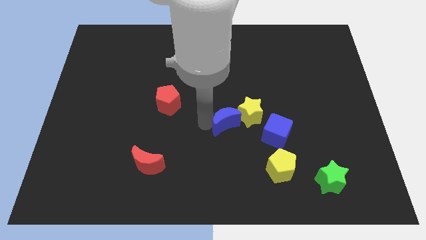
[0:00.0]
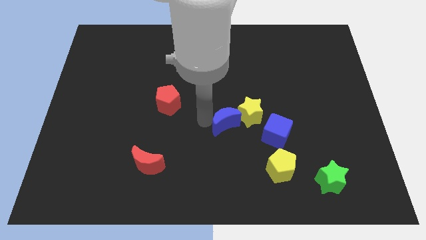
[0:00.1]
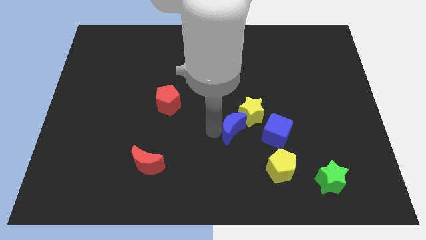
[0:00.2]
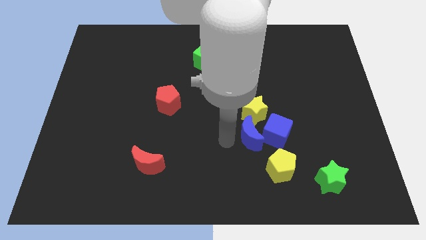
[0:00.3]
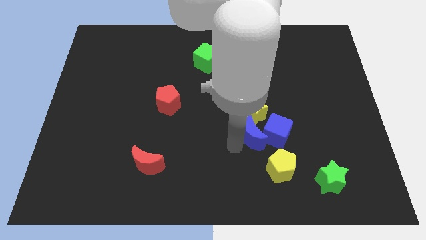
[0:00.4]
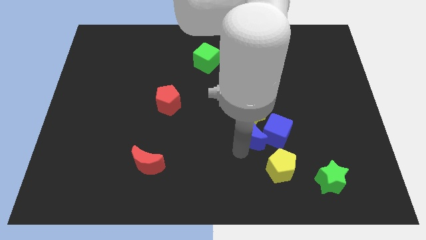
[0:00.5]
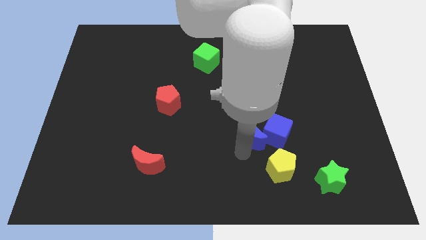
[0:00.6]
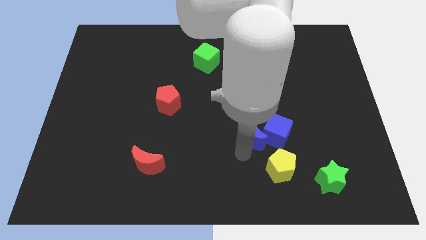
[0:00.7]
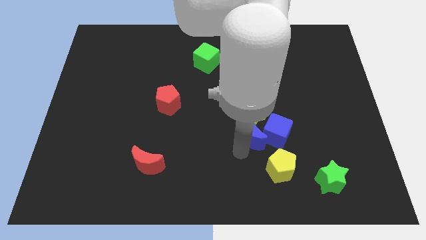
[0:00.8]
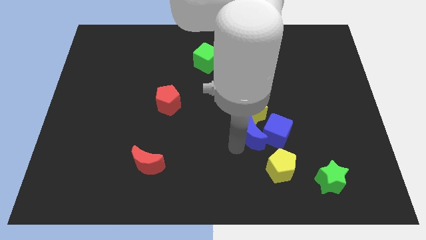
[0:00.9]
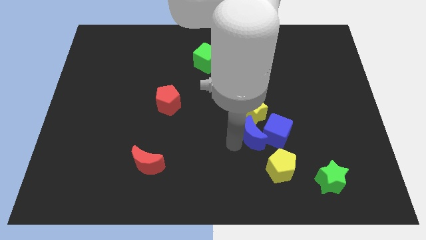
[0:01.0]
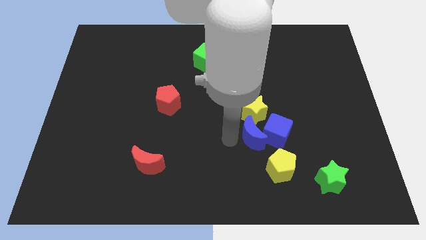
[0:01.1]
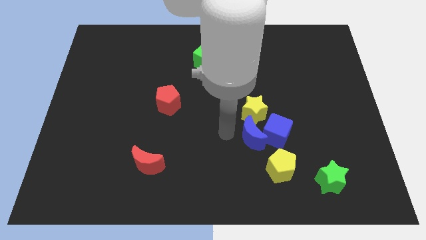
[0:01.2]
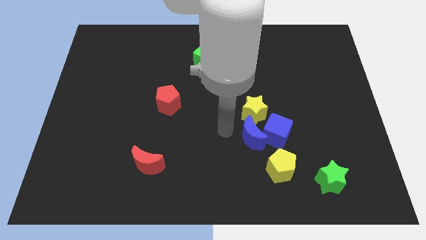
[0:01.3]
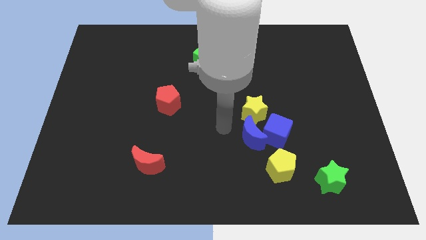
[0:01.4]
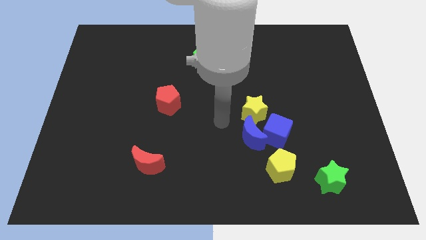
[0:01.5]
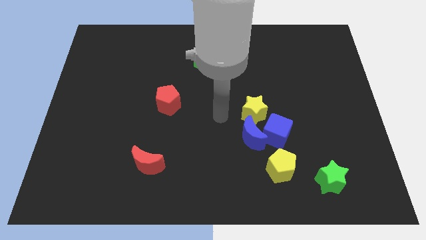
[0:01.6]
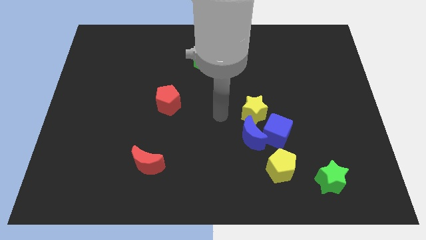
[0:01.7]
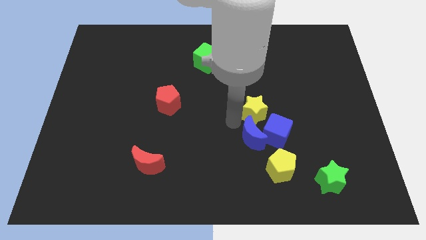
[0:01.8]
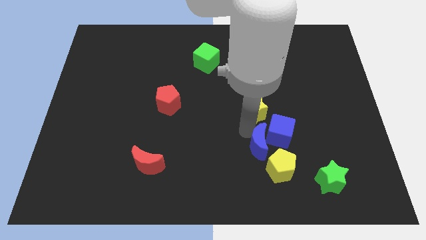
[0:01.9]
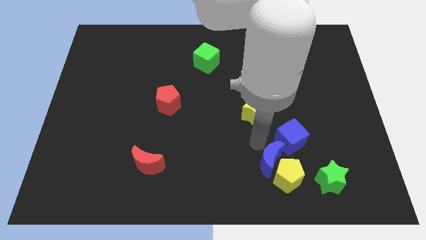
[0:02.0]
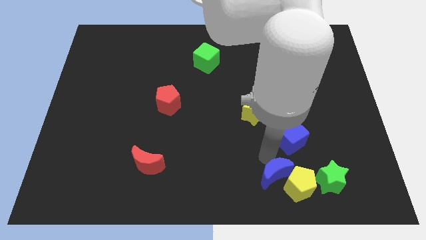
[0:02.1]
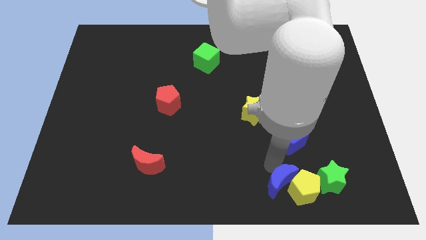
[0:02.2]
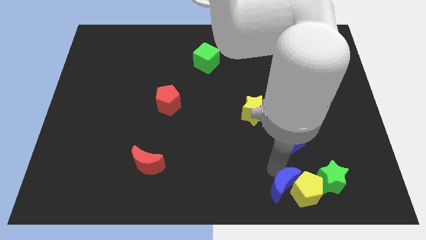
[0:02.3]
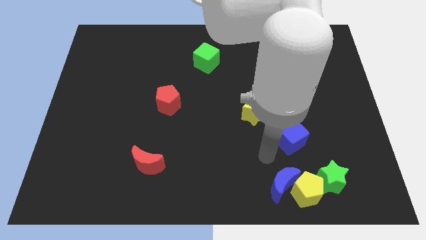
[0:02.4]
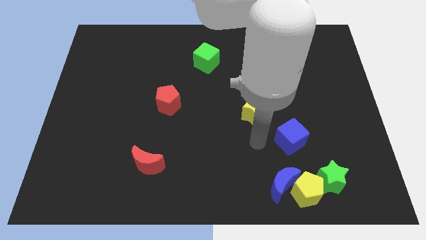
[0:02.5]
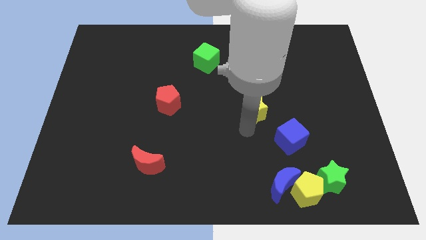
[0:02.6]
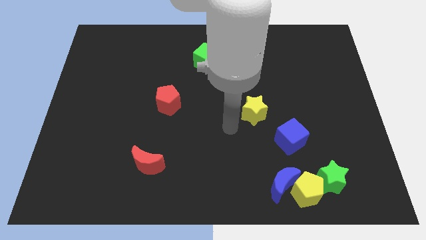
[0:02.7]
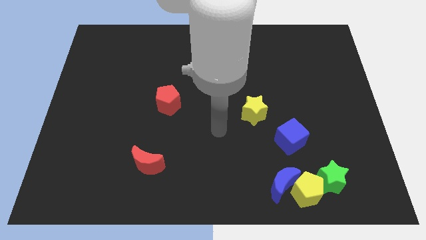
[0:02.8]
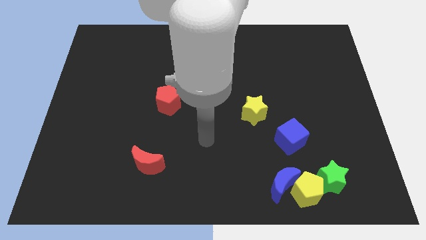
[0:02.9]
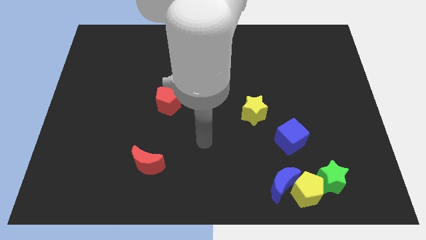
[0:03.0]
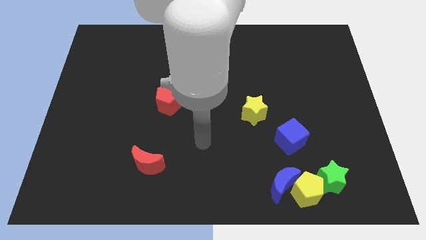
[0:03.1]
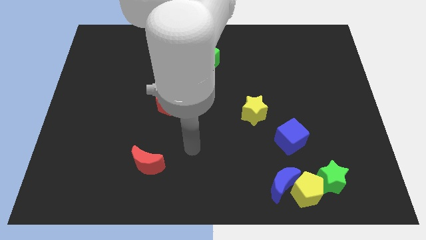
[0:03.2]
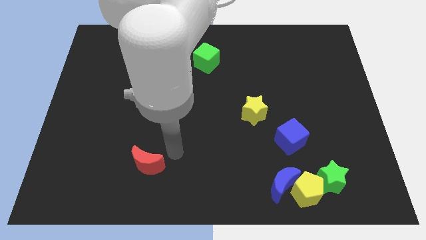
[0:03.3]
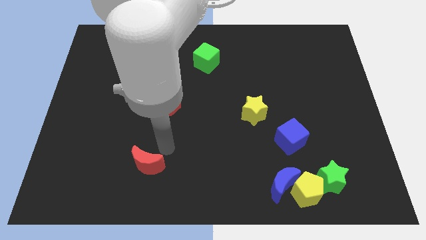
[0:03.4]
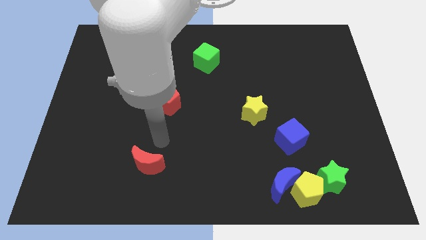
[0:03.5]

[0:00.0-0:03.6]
push the blue moon and yellow pentagon downward

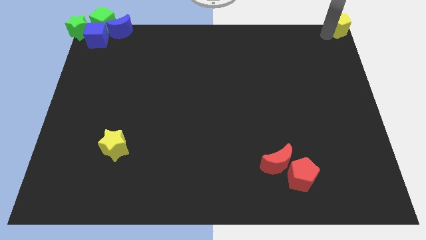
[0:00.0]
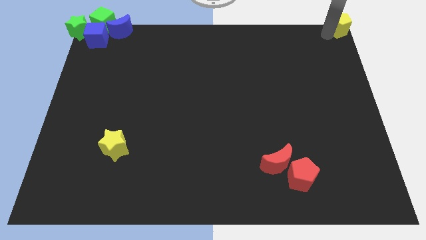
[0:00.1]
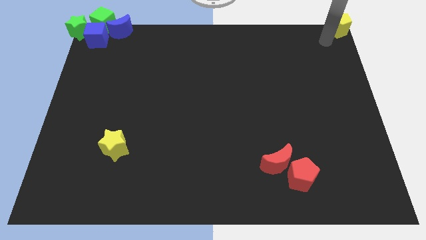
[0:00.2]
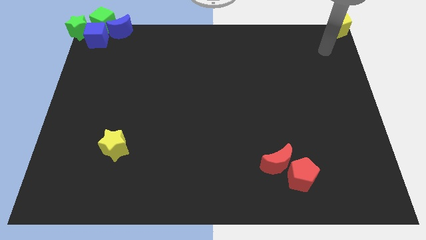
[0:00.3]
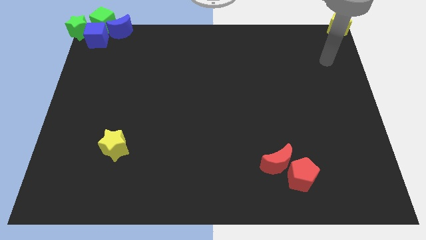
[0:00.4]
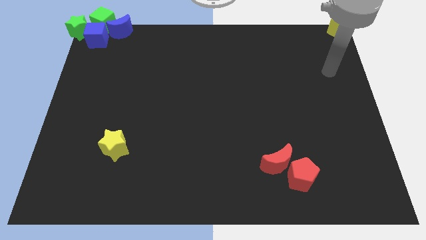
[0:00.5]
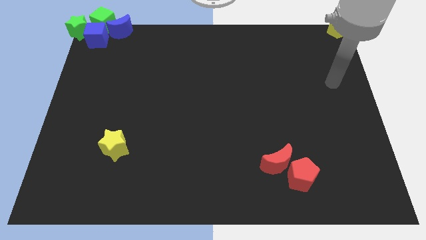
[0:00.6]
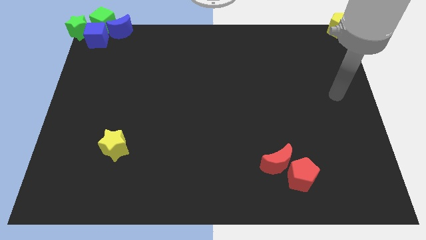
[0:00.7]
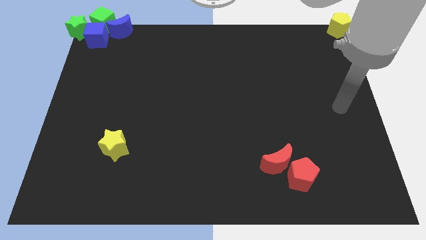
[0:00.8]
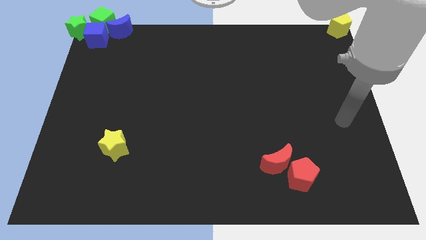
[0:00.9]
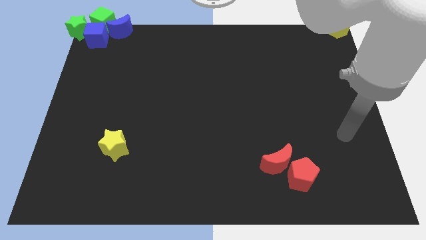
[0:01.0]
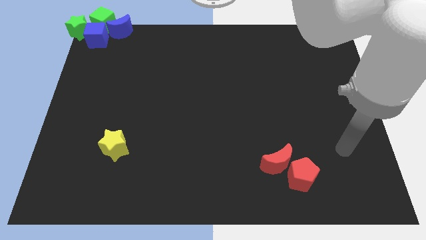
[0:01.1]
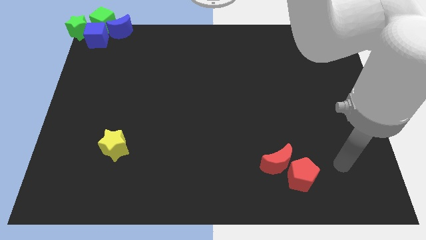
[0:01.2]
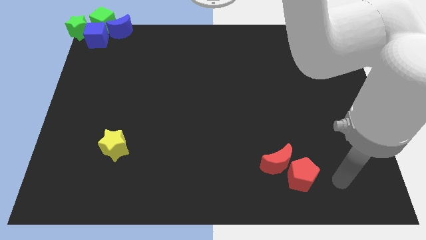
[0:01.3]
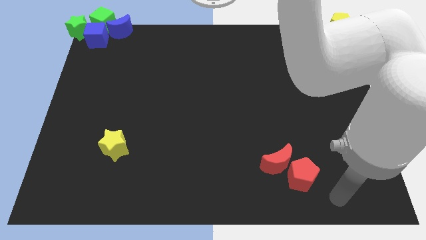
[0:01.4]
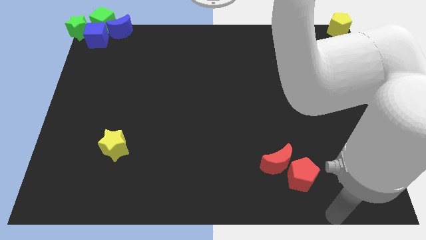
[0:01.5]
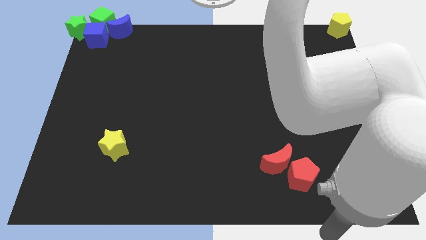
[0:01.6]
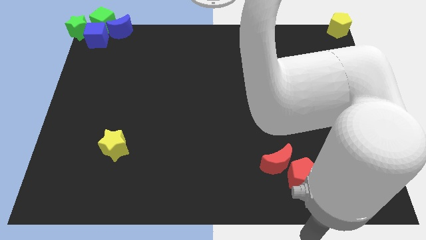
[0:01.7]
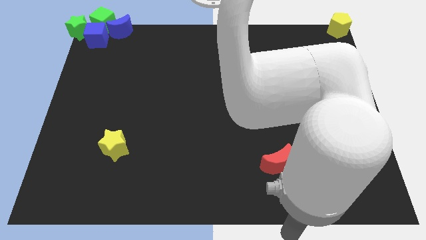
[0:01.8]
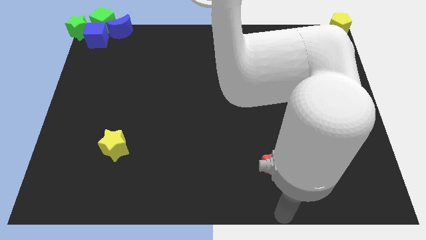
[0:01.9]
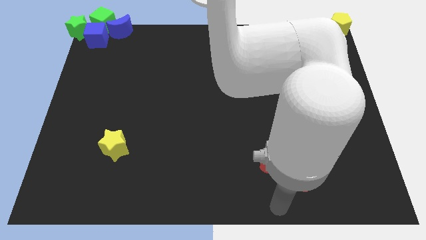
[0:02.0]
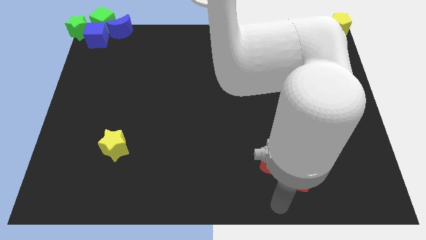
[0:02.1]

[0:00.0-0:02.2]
place the arm below the red pentagon and red crescent

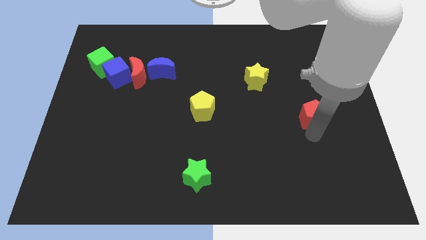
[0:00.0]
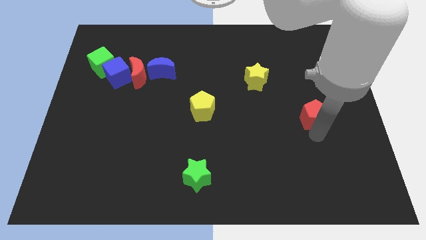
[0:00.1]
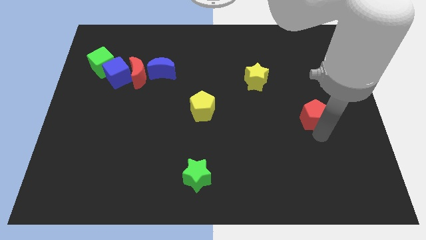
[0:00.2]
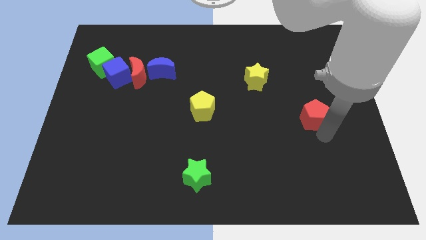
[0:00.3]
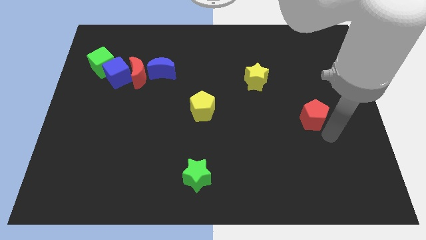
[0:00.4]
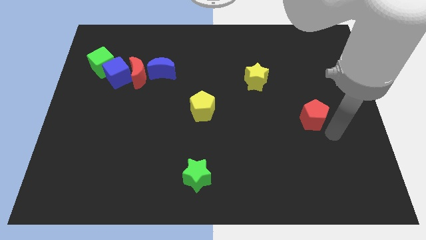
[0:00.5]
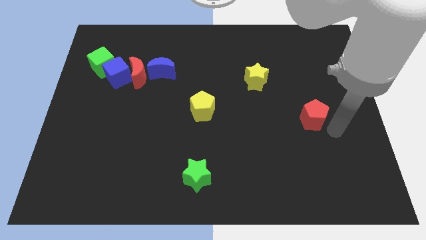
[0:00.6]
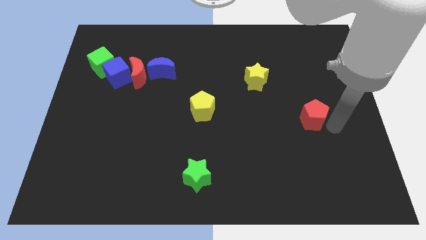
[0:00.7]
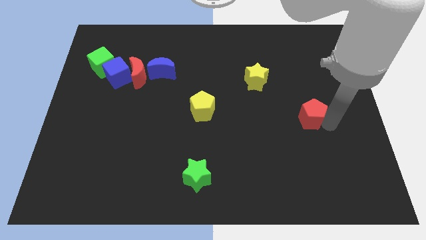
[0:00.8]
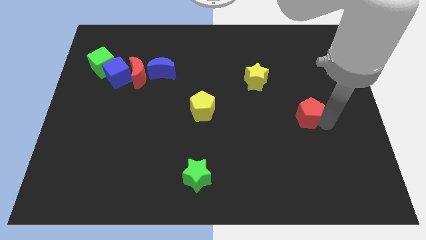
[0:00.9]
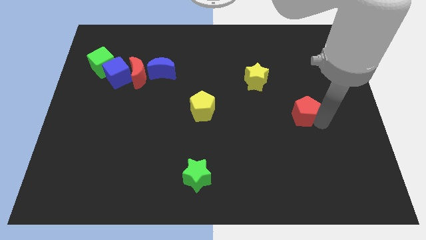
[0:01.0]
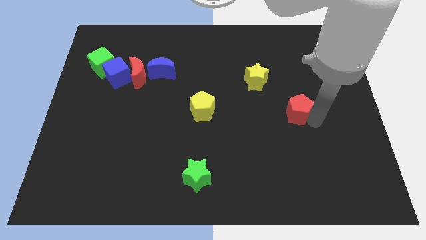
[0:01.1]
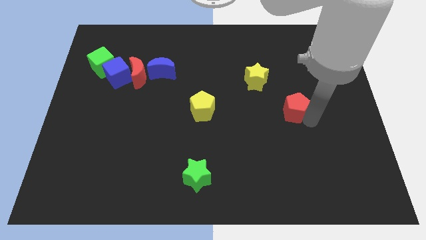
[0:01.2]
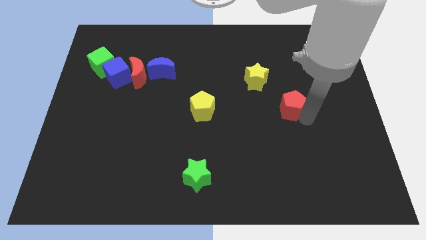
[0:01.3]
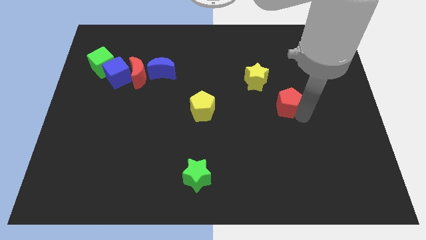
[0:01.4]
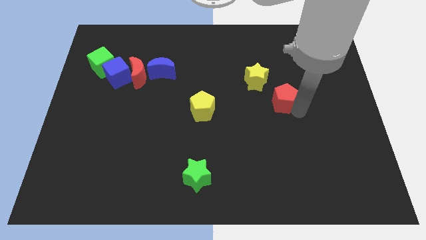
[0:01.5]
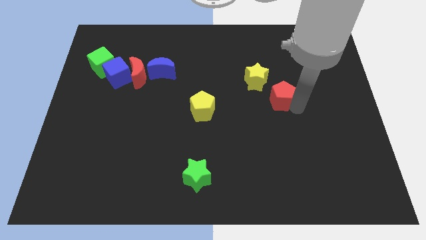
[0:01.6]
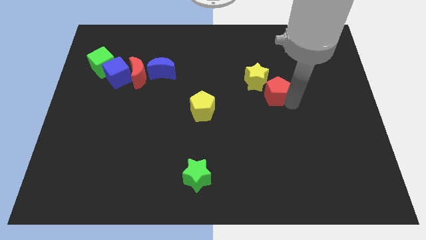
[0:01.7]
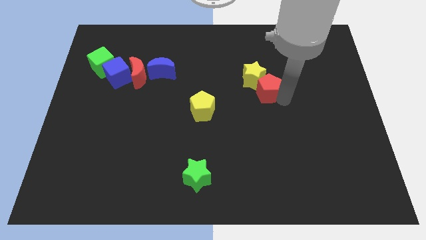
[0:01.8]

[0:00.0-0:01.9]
move the red pentagon towards the yellow star

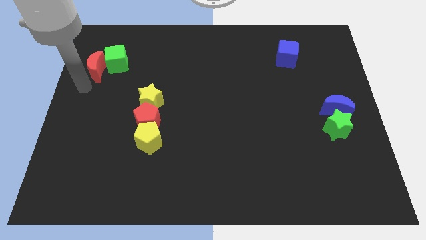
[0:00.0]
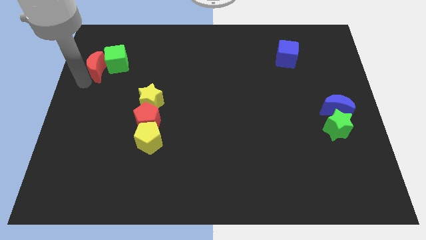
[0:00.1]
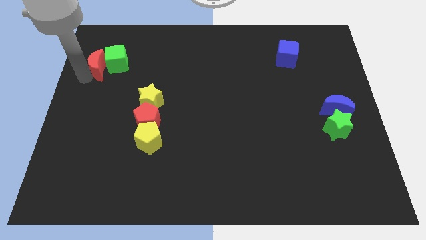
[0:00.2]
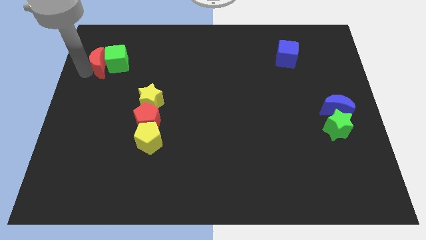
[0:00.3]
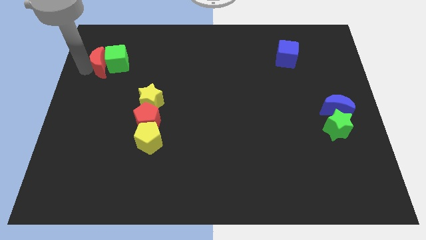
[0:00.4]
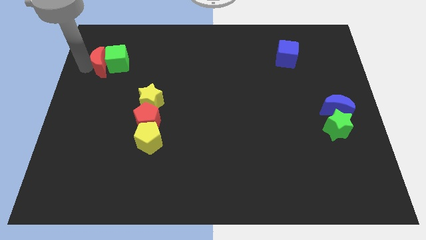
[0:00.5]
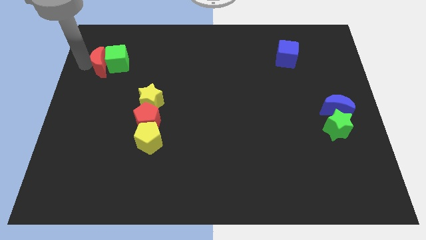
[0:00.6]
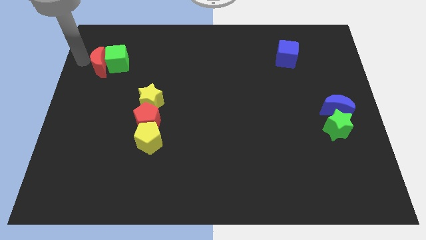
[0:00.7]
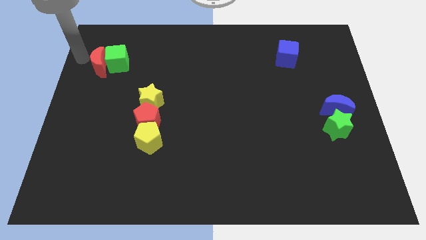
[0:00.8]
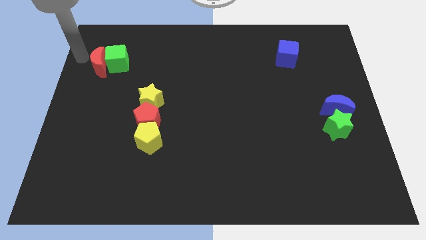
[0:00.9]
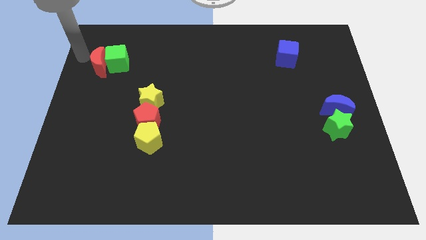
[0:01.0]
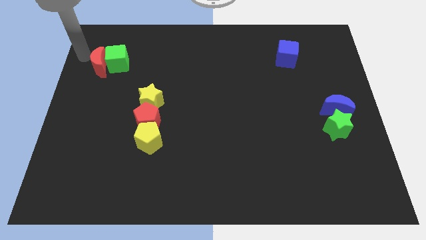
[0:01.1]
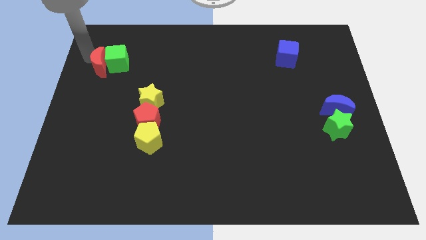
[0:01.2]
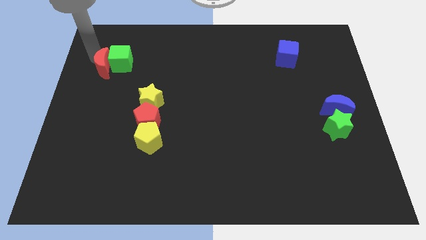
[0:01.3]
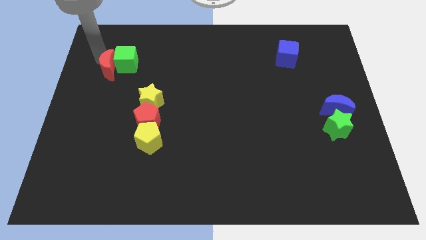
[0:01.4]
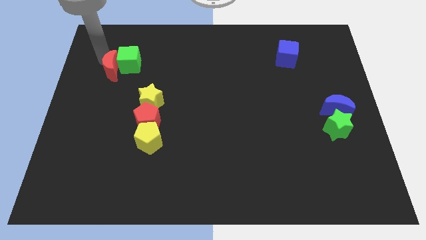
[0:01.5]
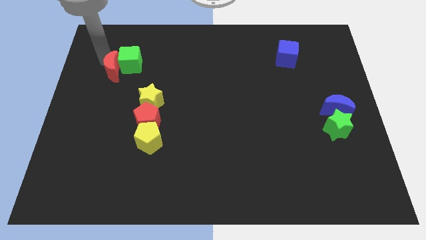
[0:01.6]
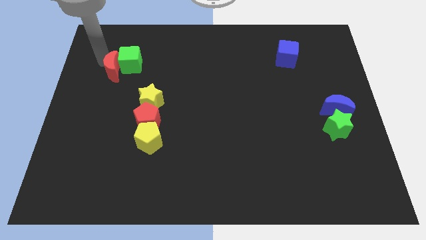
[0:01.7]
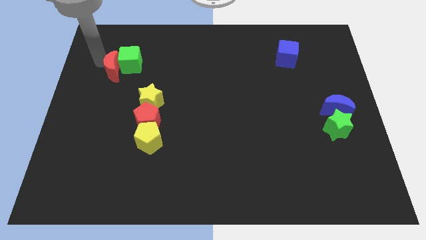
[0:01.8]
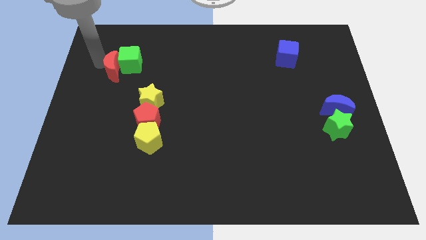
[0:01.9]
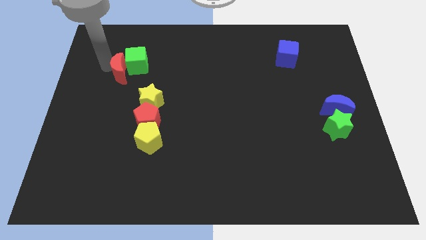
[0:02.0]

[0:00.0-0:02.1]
push the red crescent into green cube
